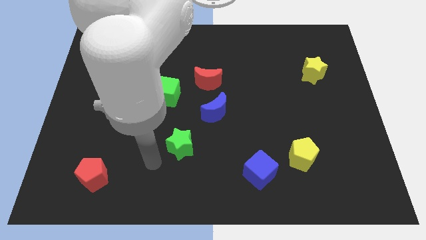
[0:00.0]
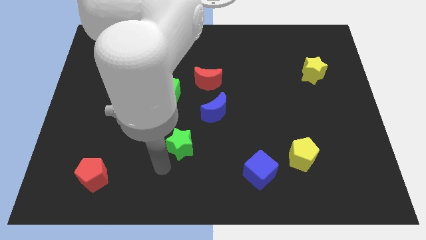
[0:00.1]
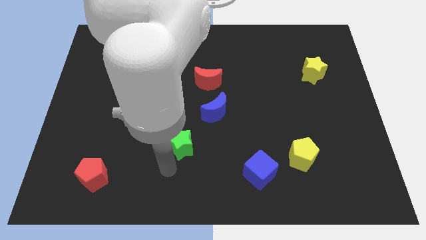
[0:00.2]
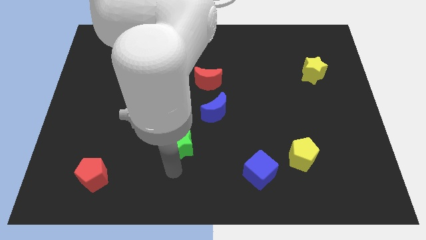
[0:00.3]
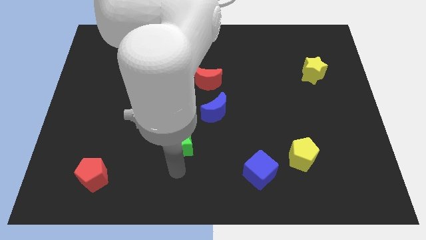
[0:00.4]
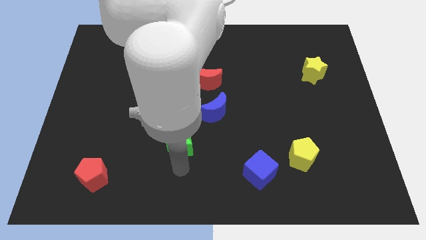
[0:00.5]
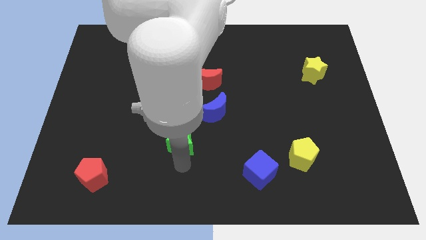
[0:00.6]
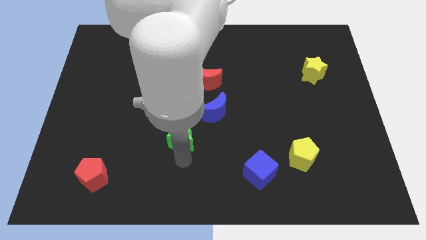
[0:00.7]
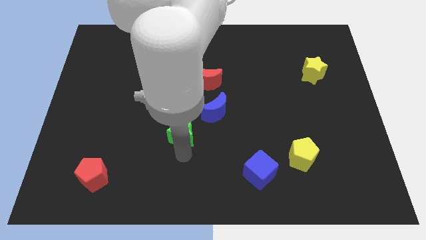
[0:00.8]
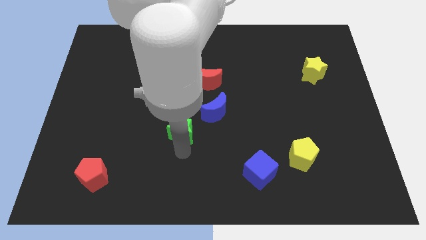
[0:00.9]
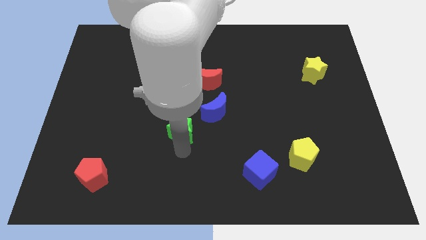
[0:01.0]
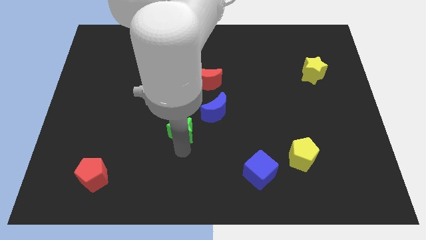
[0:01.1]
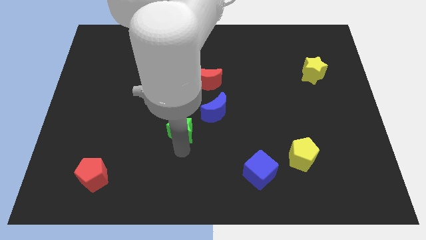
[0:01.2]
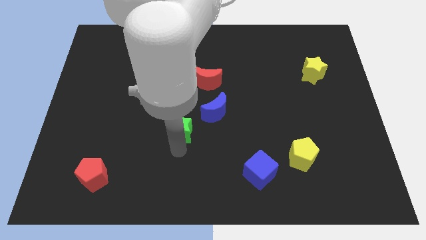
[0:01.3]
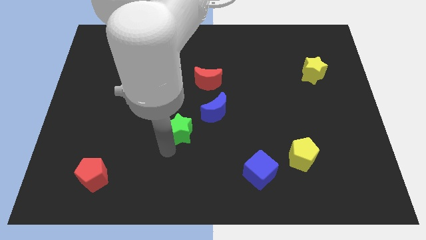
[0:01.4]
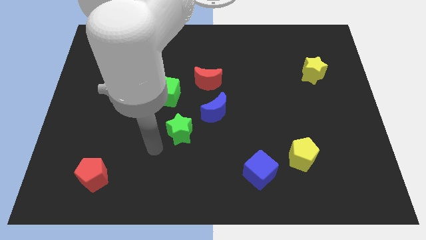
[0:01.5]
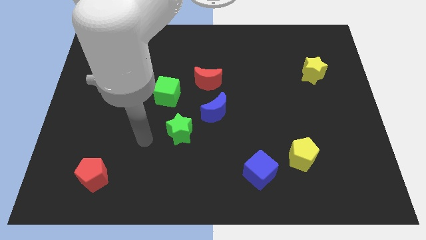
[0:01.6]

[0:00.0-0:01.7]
place green star to the bottom of green cube

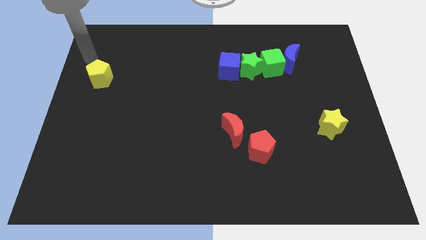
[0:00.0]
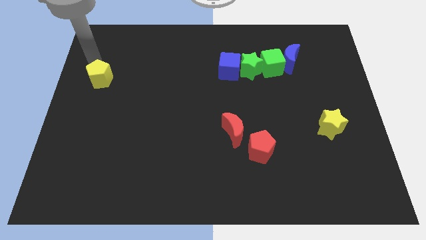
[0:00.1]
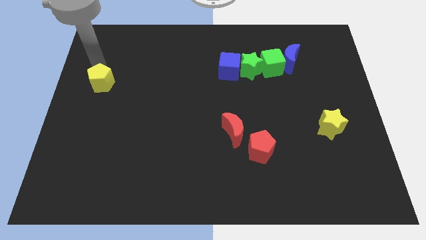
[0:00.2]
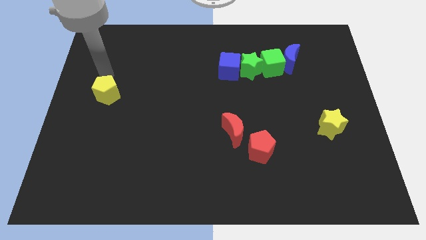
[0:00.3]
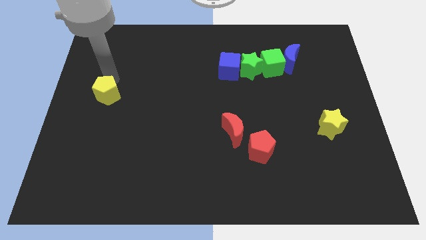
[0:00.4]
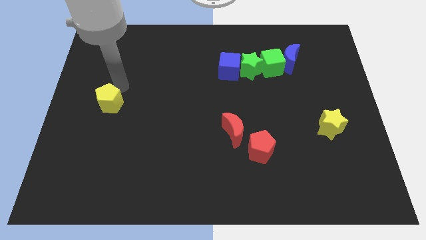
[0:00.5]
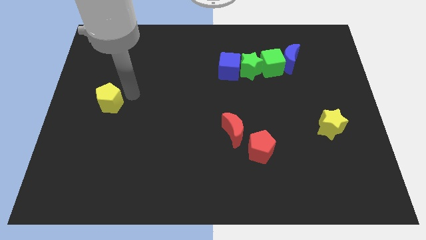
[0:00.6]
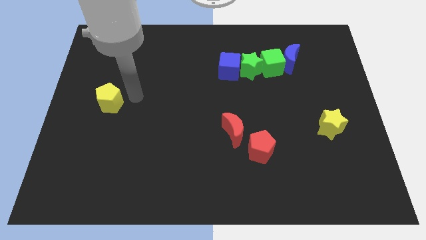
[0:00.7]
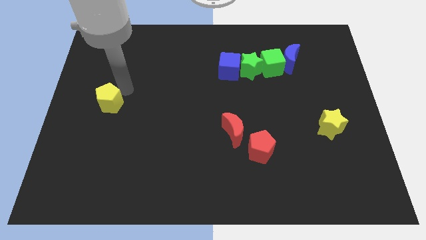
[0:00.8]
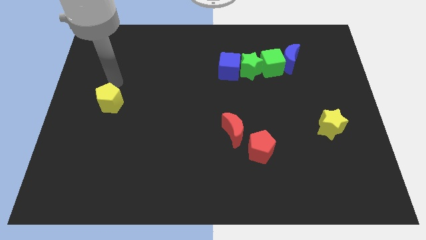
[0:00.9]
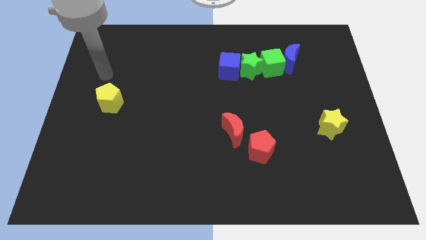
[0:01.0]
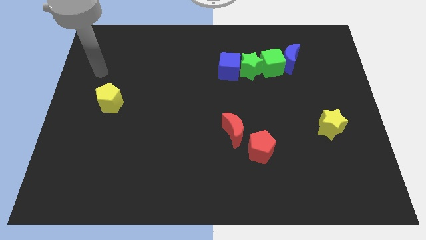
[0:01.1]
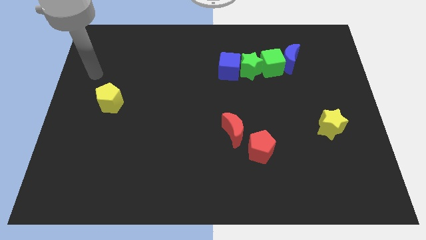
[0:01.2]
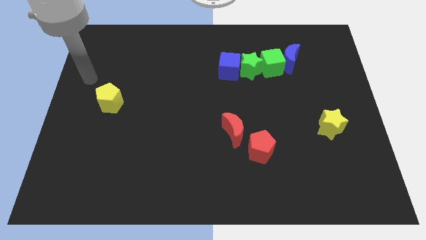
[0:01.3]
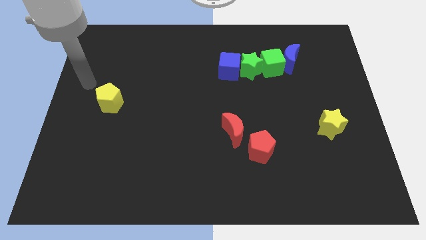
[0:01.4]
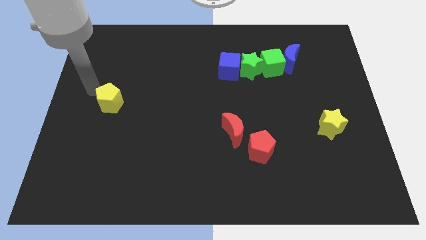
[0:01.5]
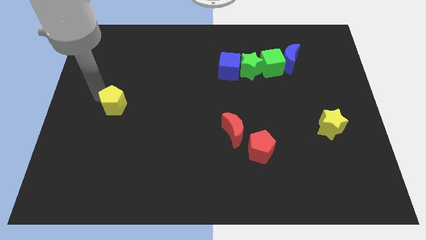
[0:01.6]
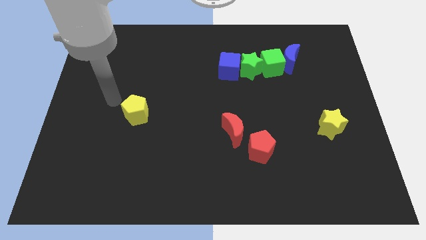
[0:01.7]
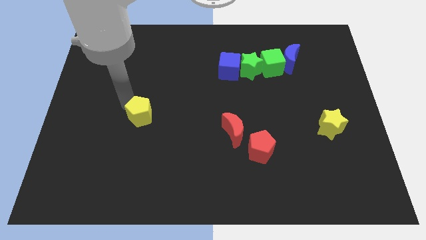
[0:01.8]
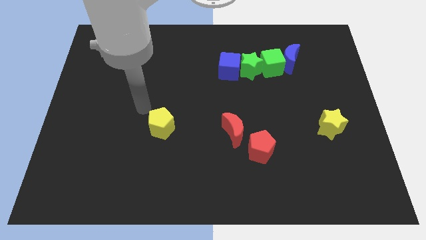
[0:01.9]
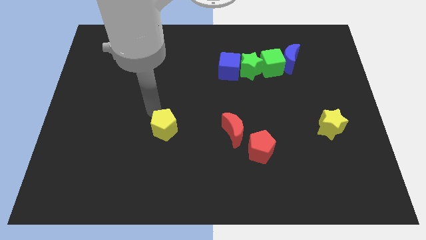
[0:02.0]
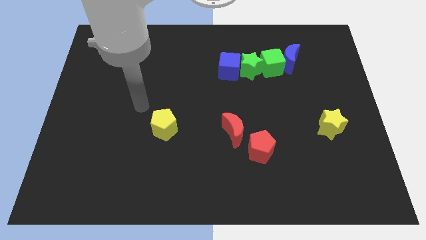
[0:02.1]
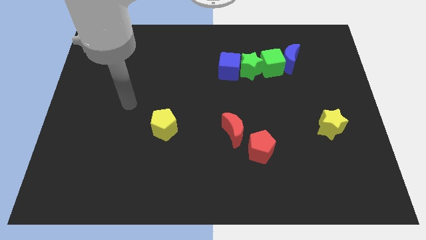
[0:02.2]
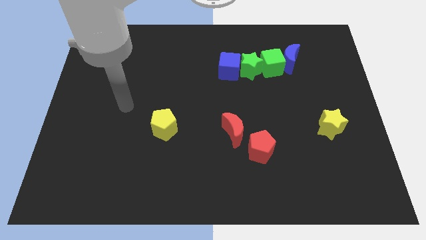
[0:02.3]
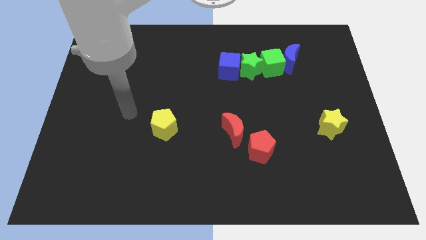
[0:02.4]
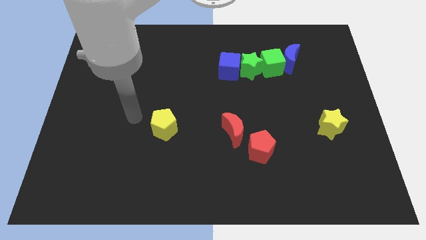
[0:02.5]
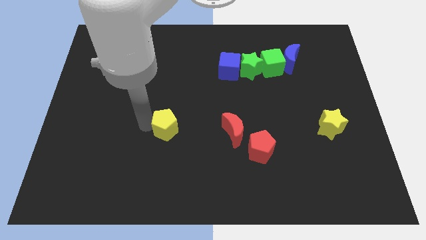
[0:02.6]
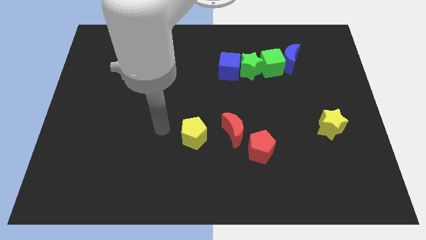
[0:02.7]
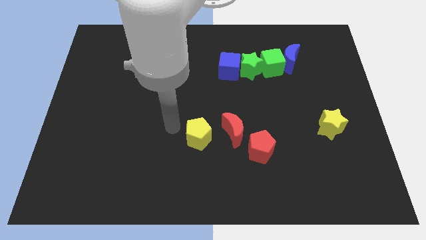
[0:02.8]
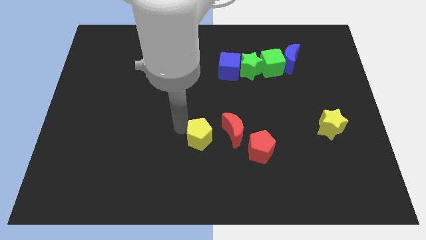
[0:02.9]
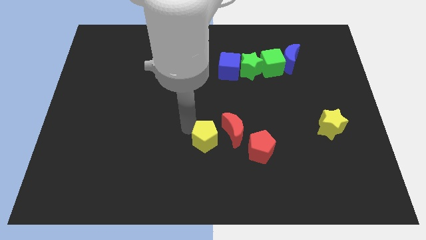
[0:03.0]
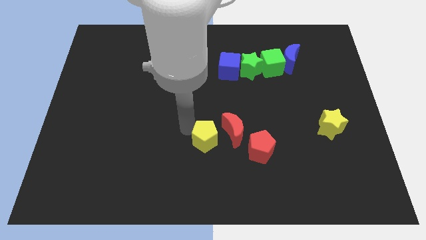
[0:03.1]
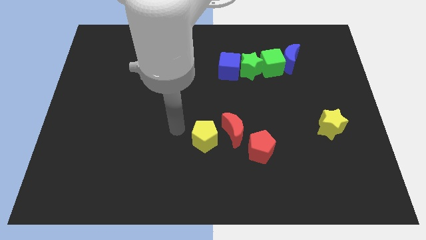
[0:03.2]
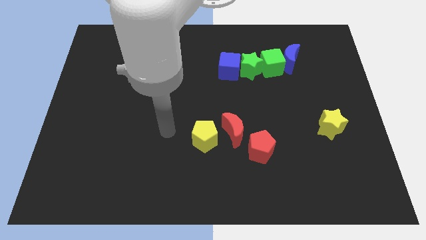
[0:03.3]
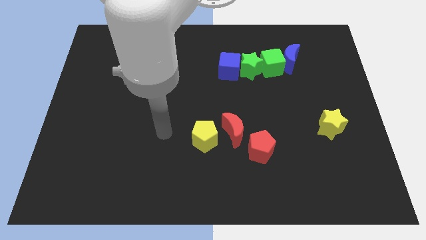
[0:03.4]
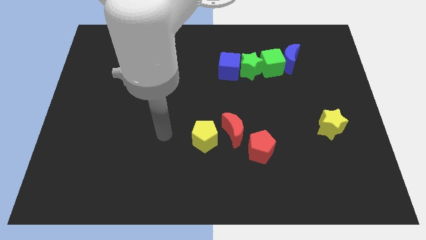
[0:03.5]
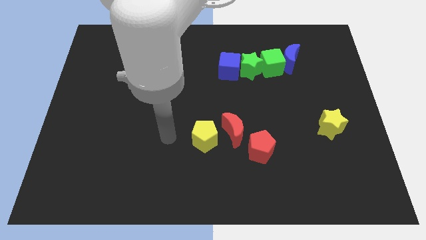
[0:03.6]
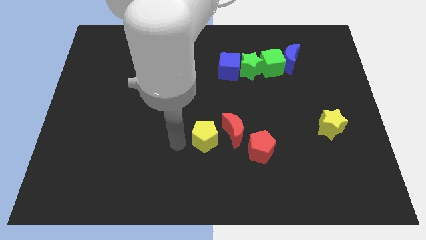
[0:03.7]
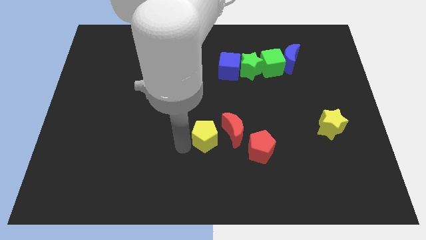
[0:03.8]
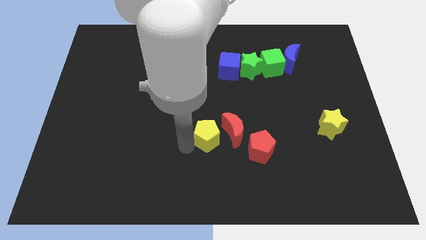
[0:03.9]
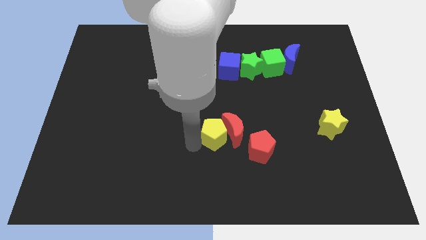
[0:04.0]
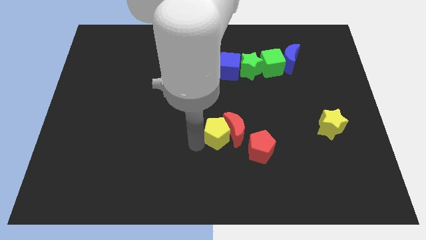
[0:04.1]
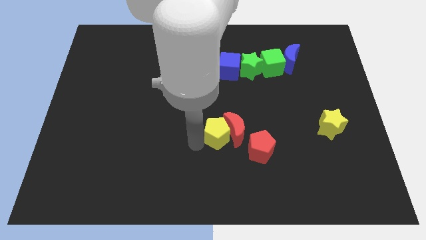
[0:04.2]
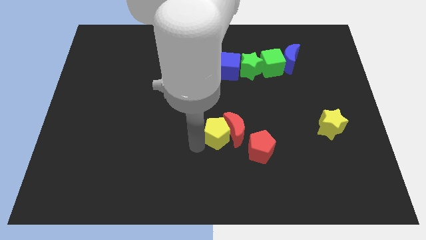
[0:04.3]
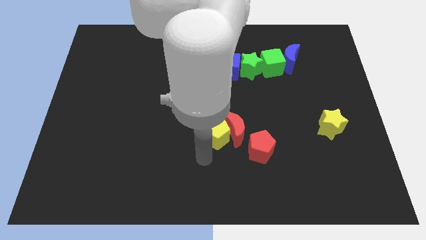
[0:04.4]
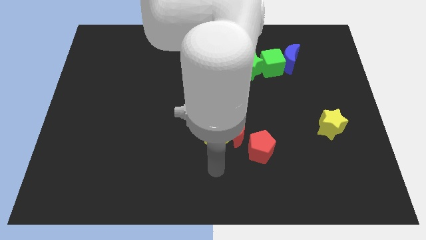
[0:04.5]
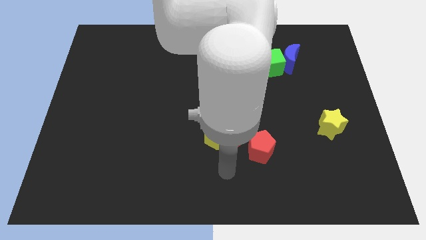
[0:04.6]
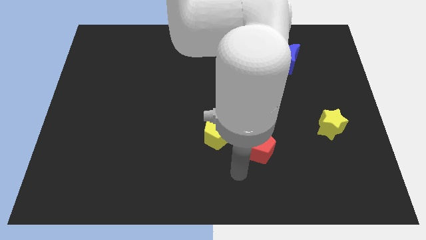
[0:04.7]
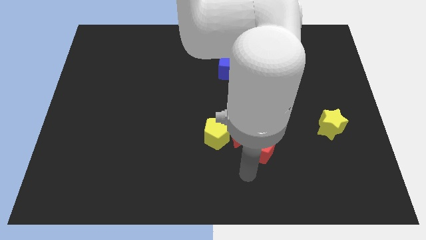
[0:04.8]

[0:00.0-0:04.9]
move yellow pentagon into the left of red crescent

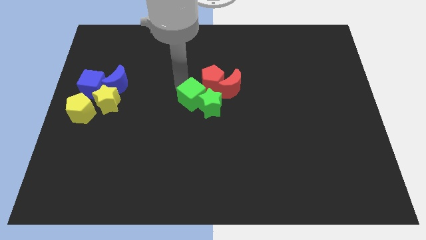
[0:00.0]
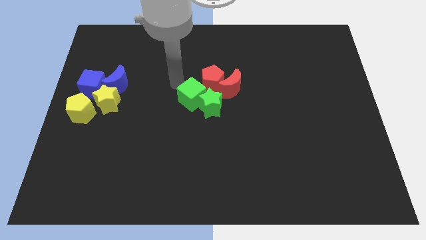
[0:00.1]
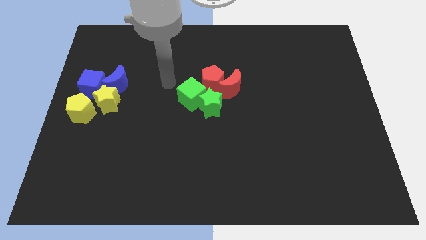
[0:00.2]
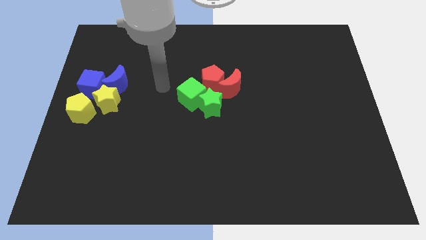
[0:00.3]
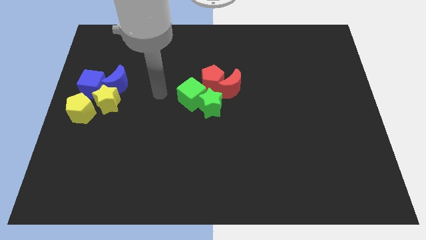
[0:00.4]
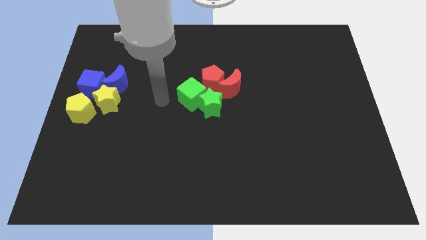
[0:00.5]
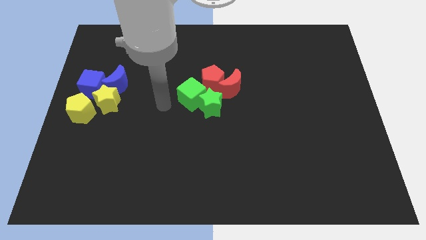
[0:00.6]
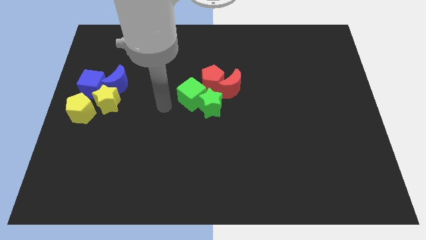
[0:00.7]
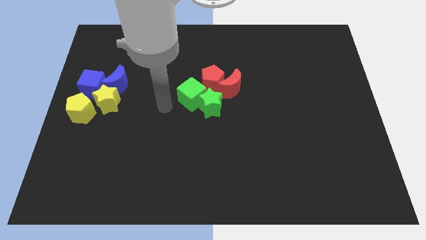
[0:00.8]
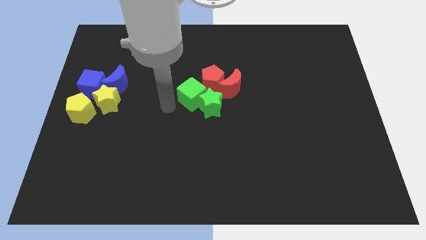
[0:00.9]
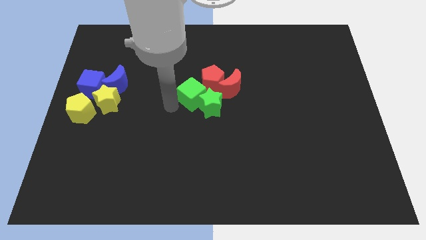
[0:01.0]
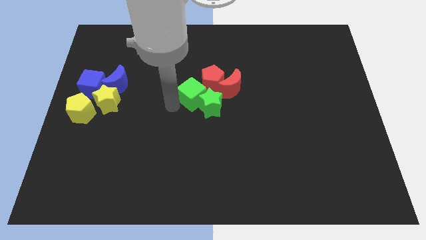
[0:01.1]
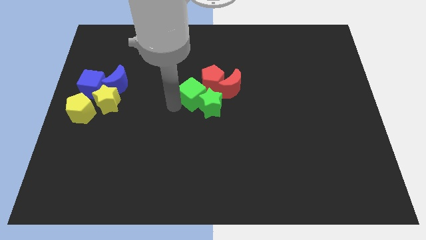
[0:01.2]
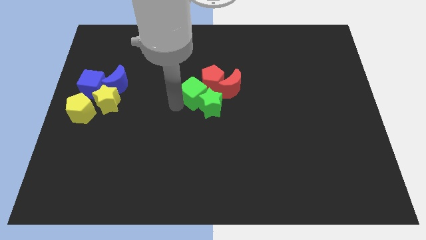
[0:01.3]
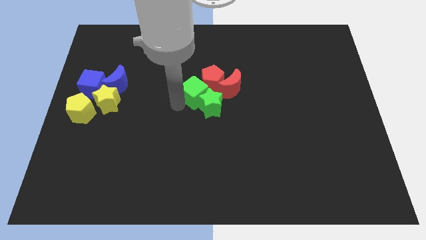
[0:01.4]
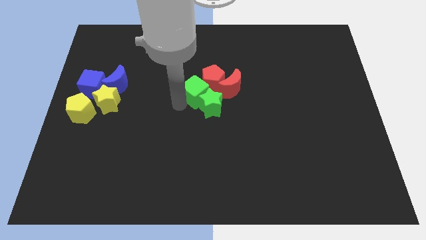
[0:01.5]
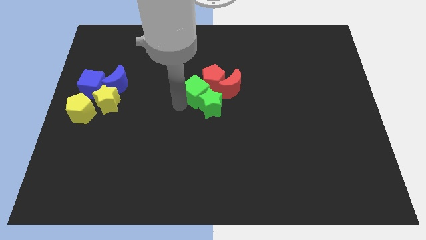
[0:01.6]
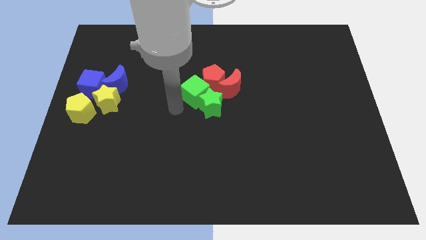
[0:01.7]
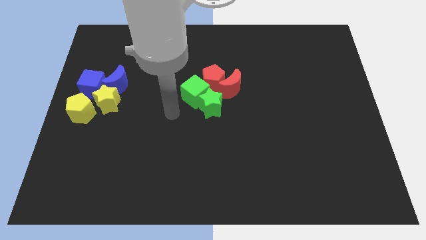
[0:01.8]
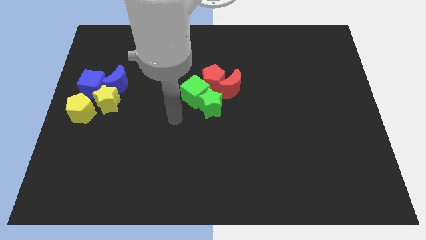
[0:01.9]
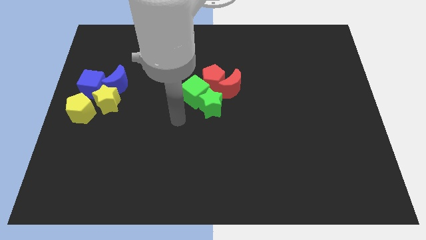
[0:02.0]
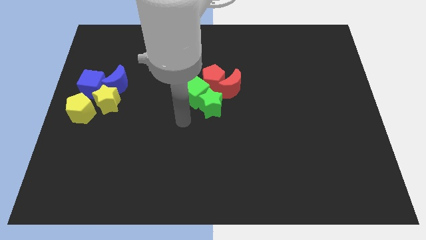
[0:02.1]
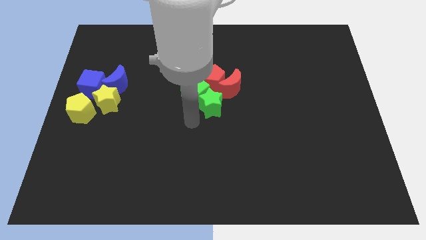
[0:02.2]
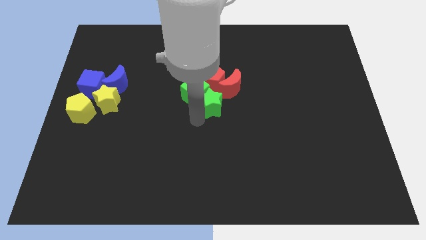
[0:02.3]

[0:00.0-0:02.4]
move your arm to the bottom of the green cube

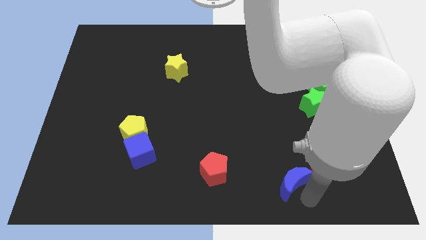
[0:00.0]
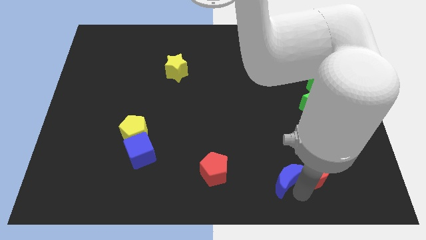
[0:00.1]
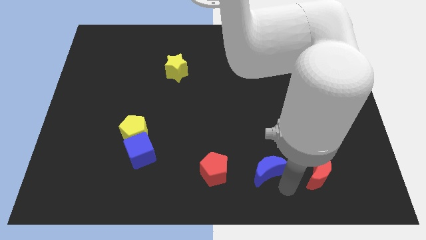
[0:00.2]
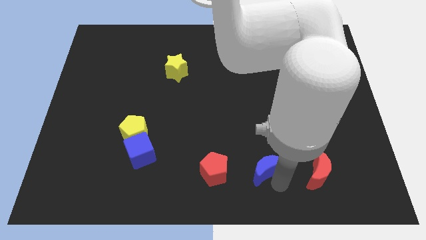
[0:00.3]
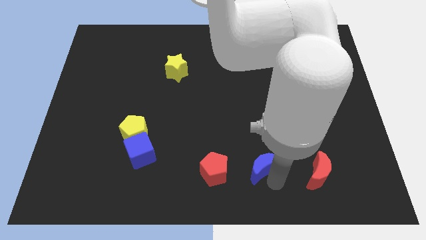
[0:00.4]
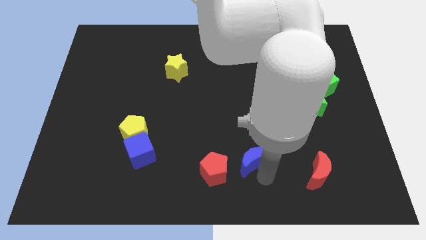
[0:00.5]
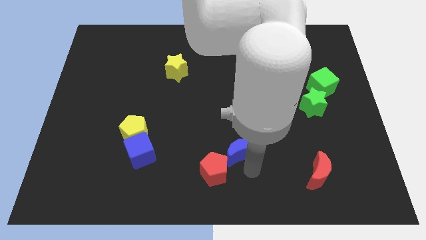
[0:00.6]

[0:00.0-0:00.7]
separate the red crescent and the blue crescent
